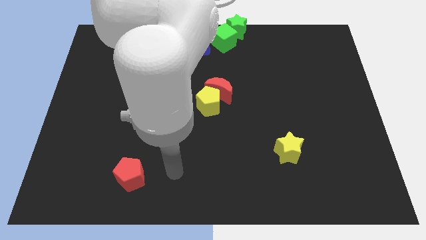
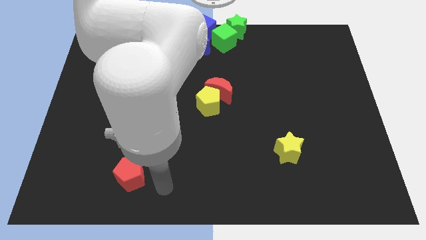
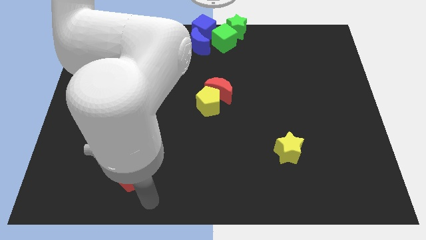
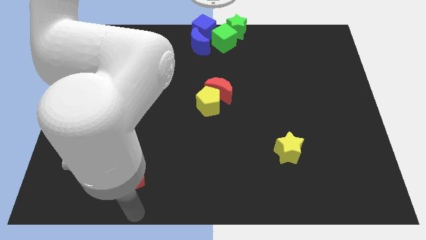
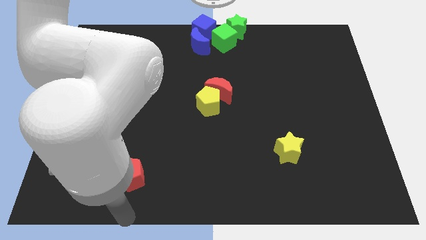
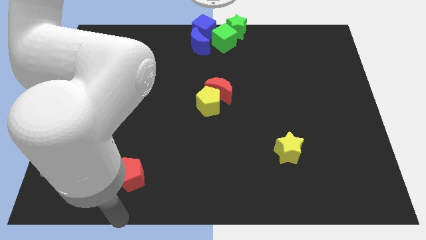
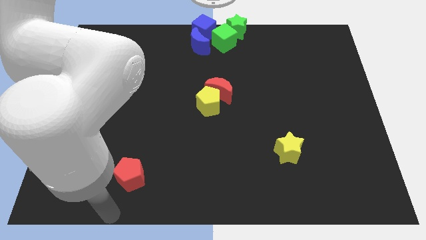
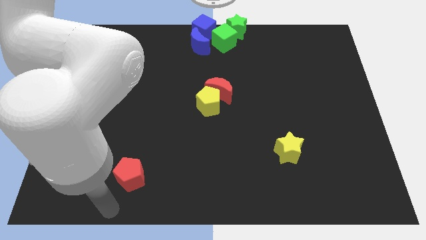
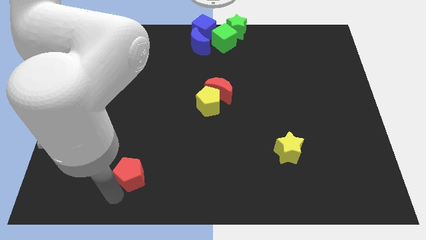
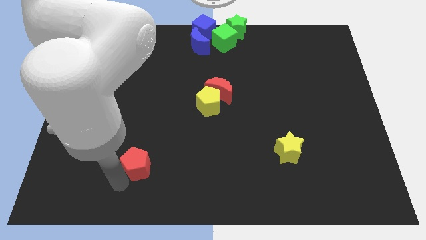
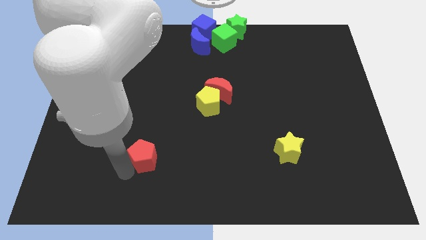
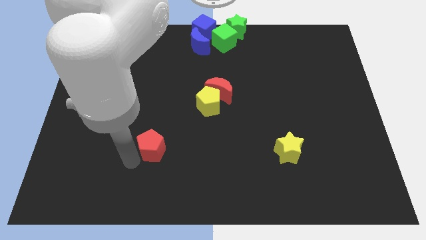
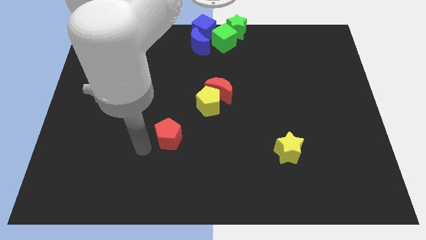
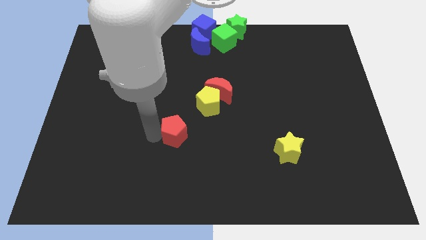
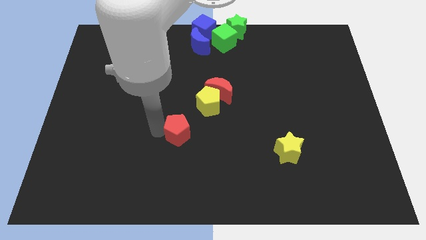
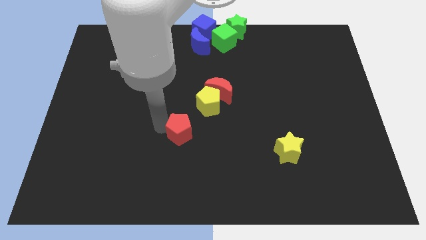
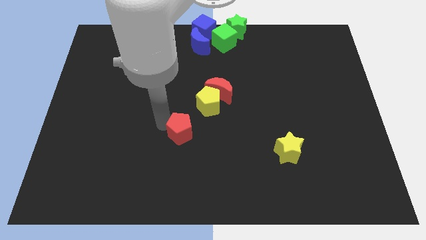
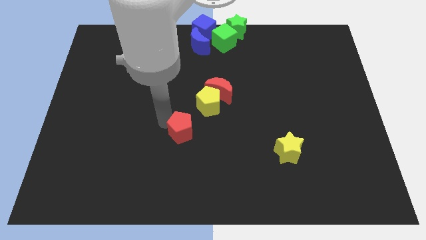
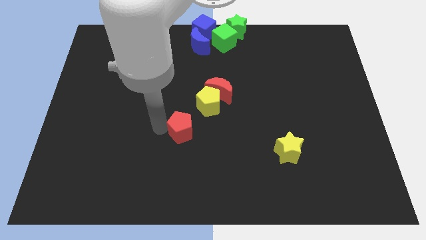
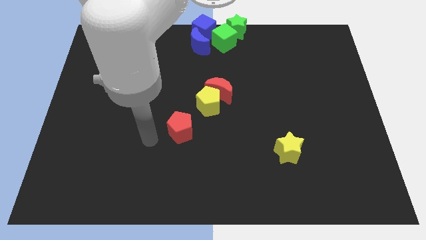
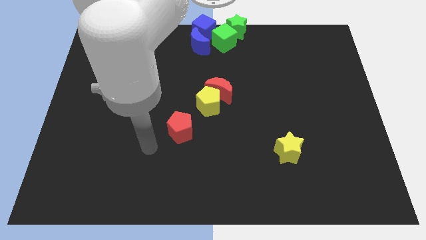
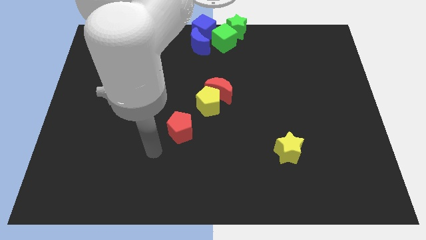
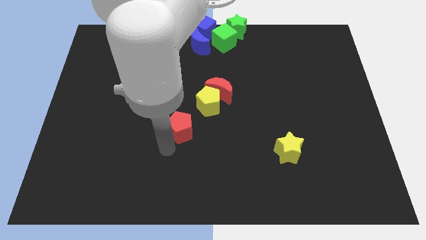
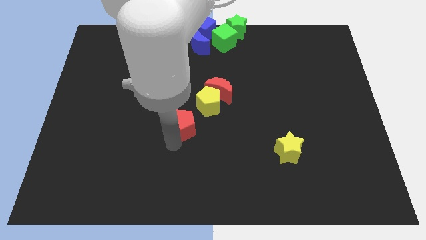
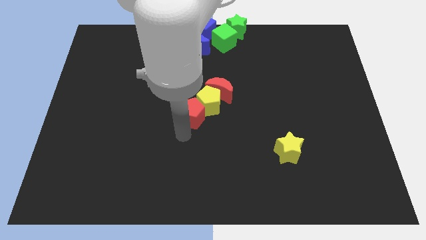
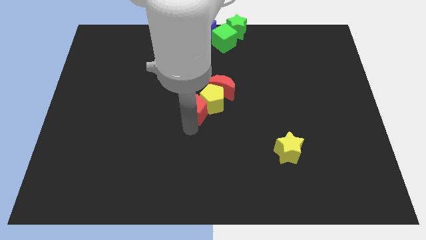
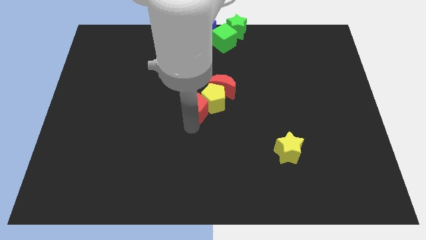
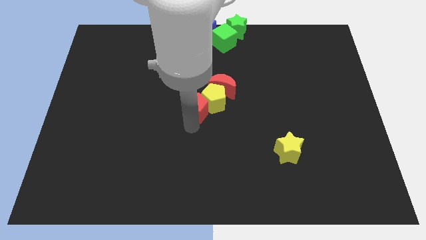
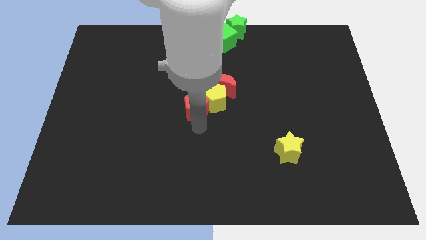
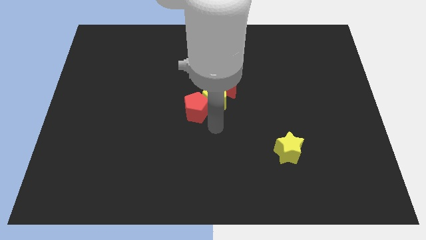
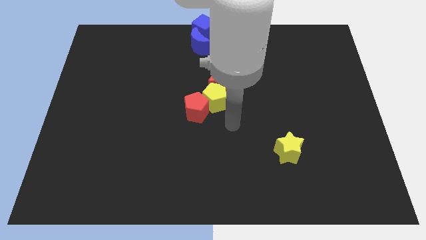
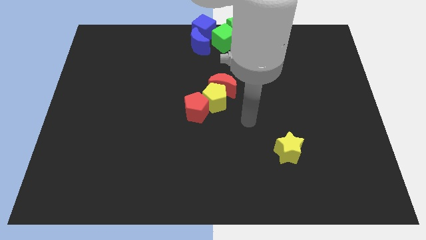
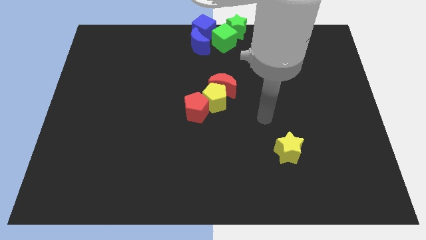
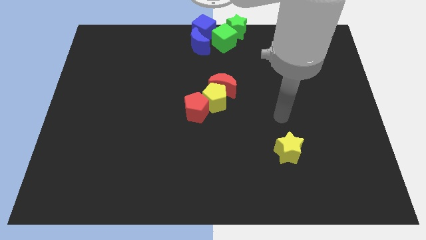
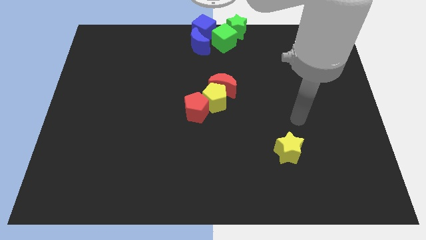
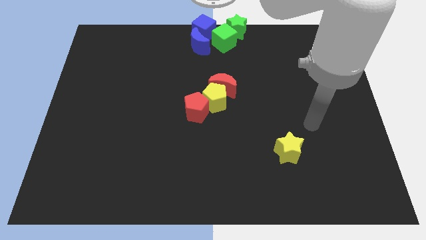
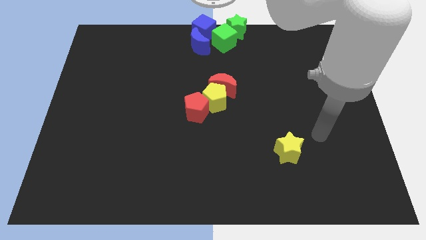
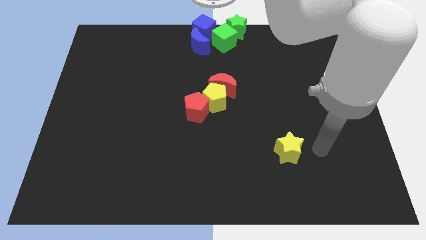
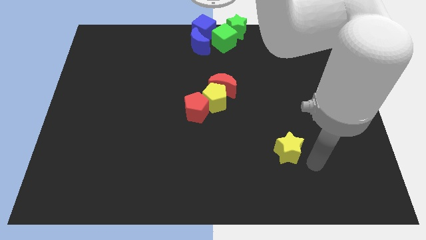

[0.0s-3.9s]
push the red pentagon into the yellow pentagon on the center of the board

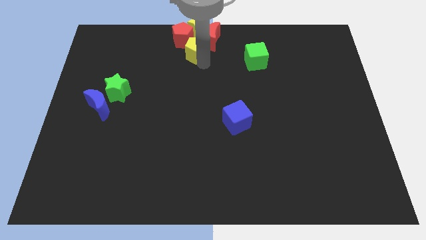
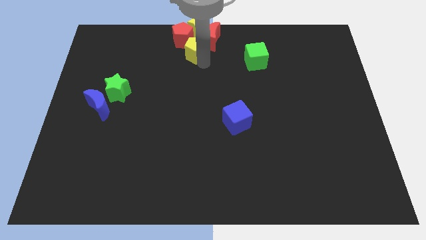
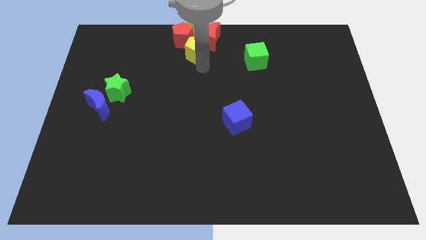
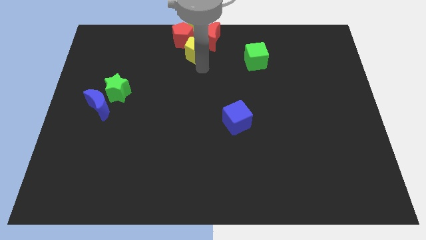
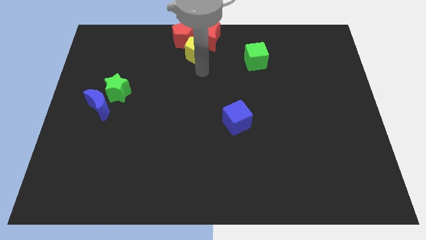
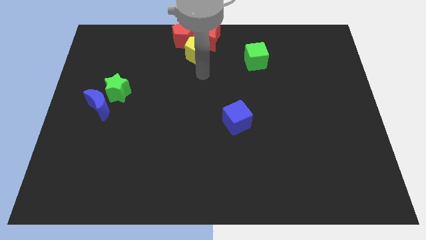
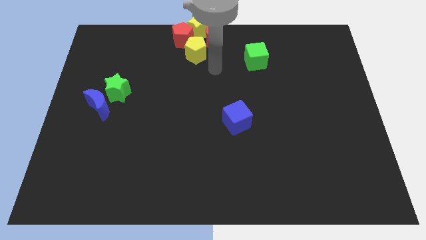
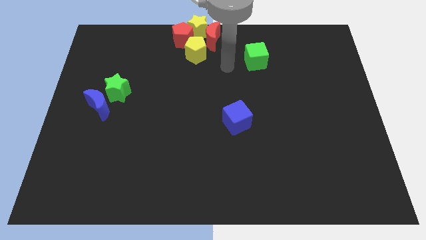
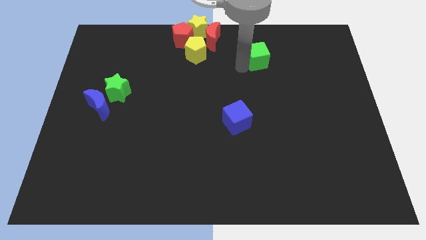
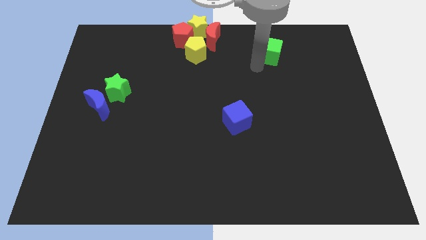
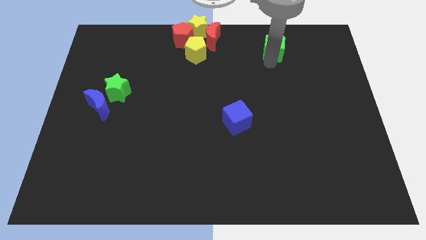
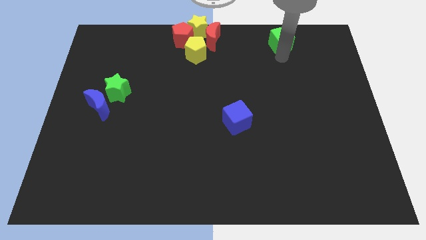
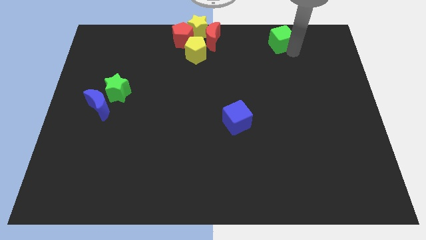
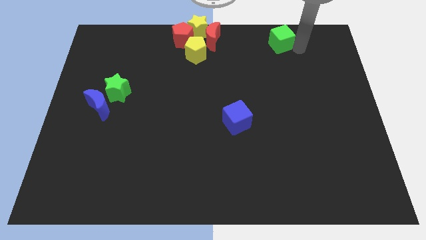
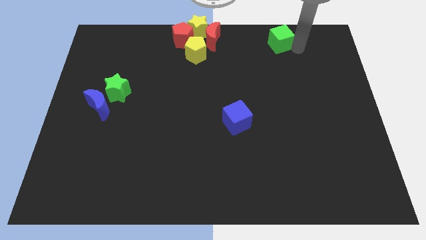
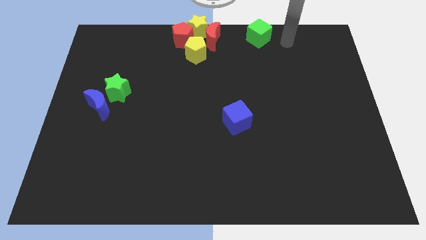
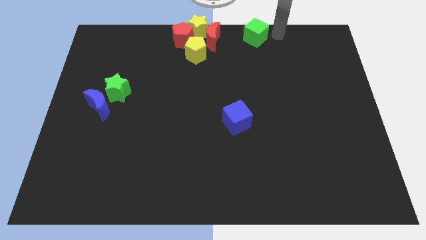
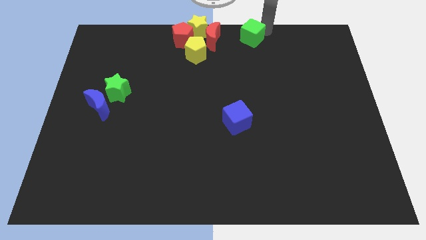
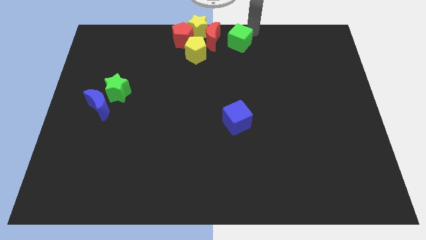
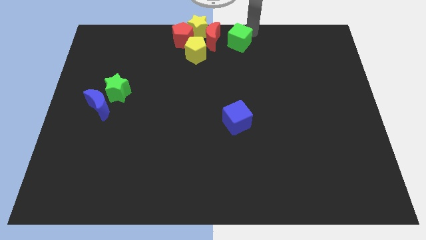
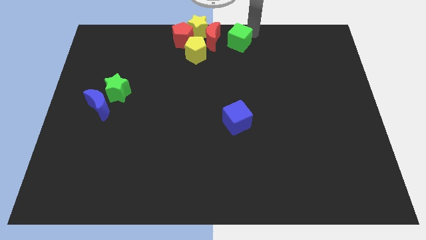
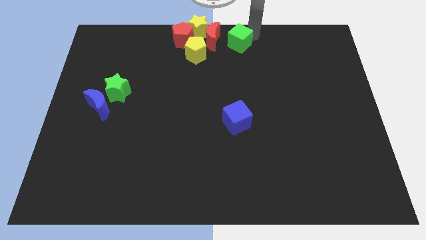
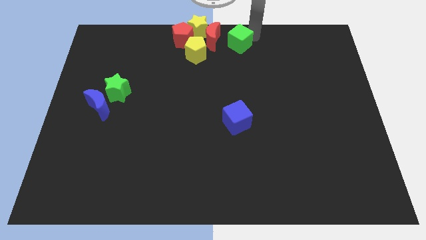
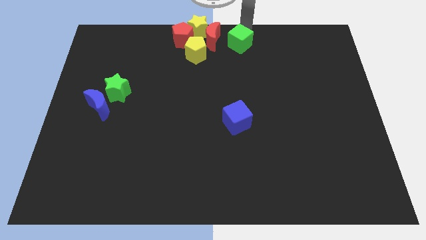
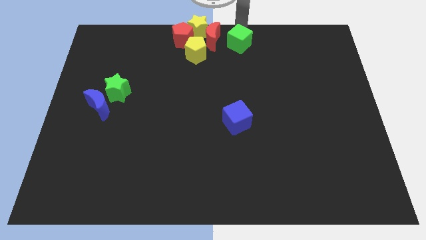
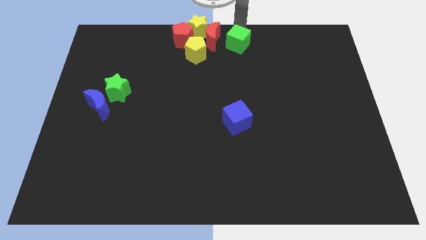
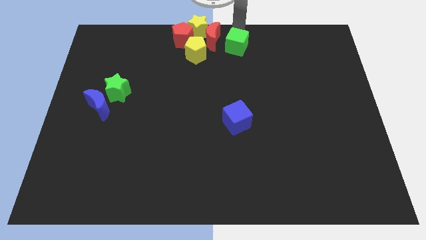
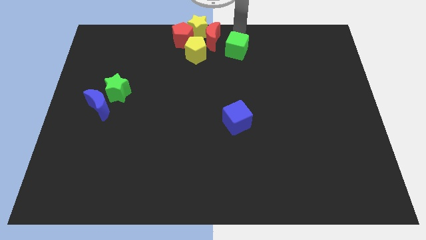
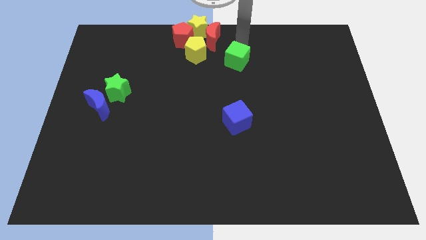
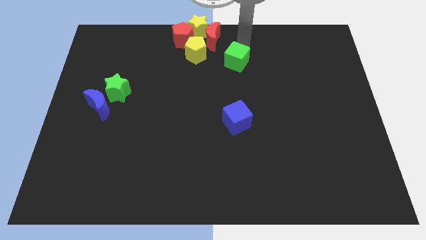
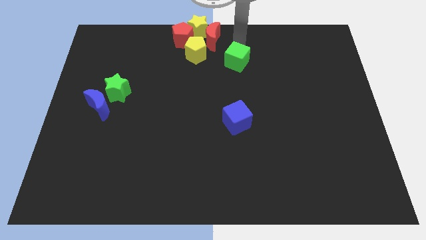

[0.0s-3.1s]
place the green cube vertical to the blue cube

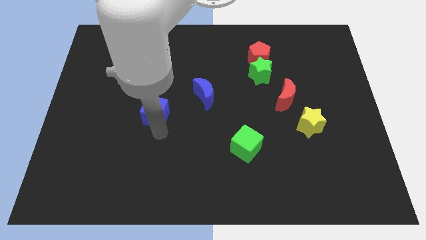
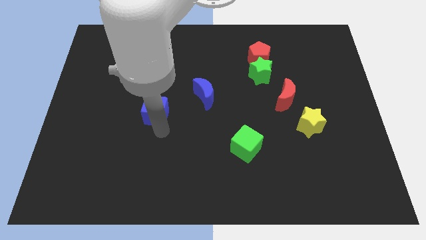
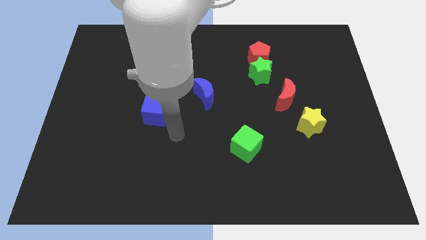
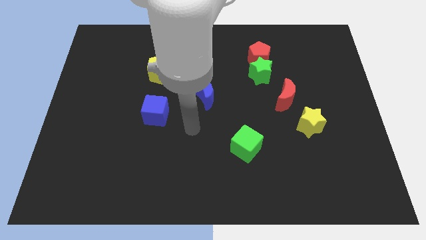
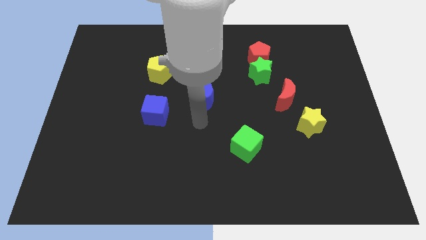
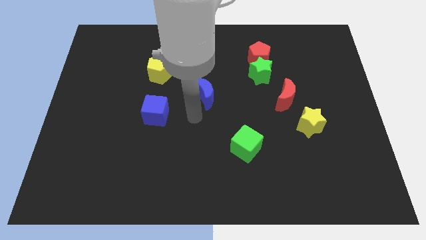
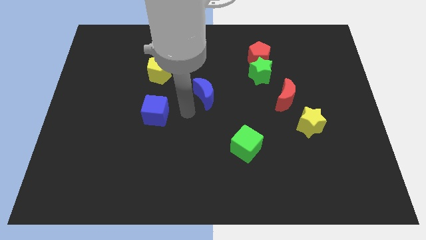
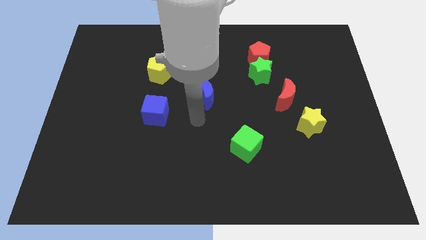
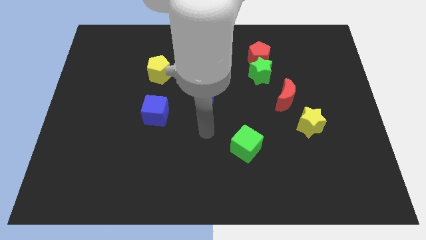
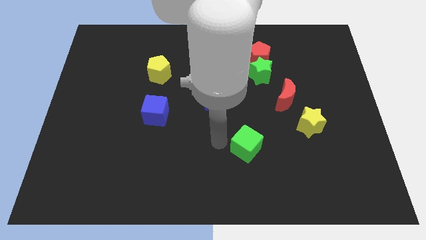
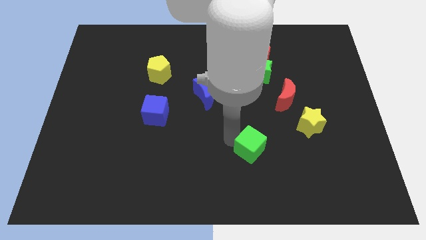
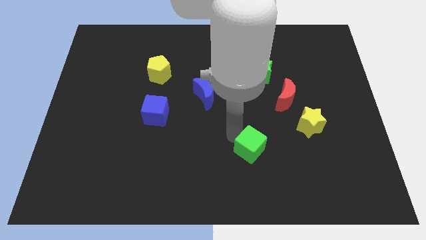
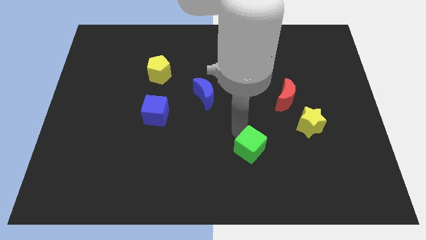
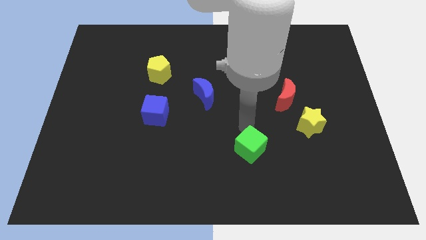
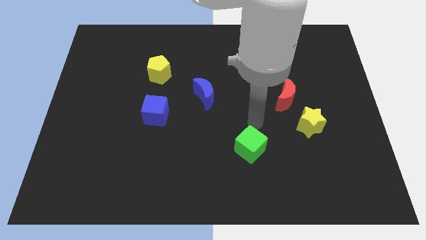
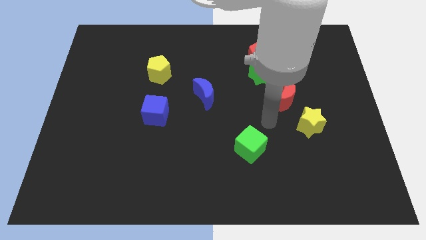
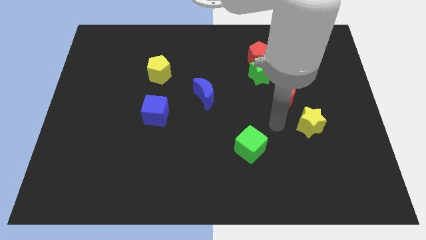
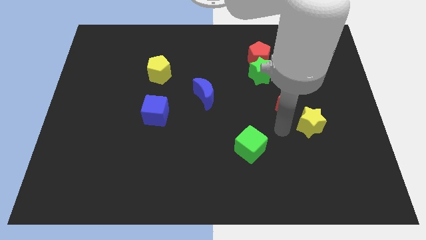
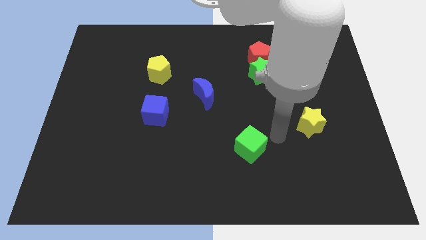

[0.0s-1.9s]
place your arm at the left side of the yellow star
